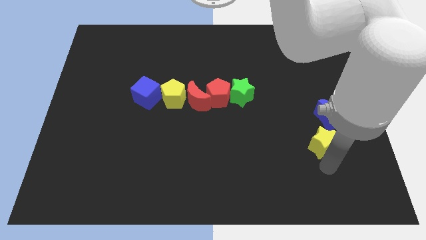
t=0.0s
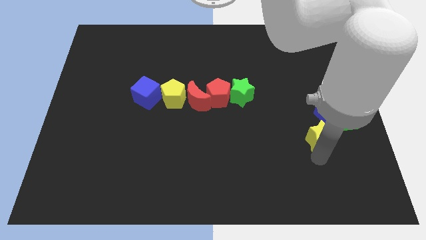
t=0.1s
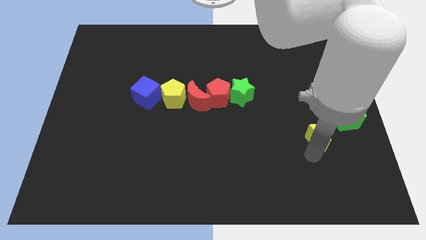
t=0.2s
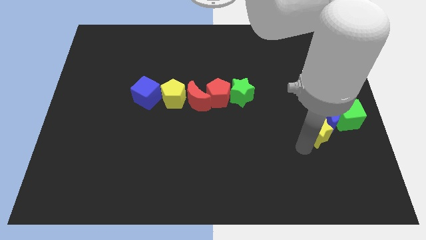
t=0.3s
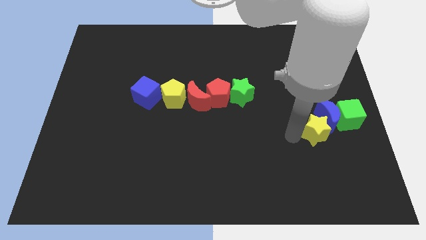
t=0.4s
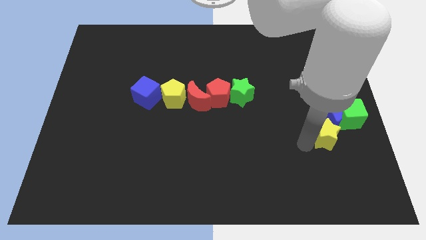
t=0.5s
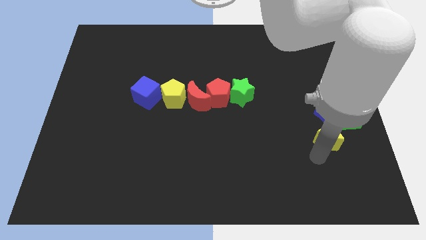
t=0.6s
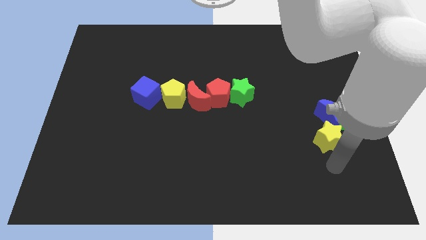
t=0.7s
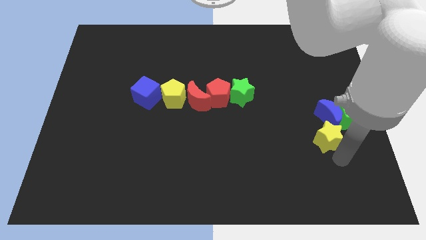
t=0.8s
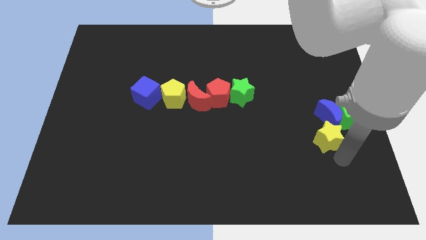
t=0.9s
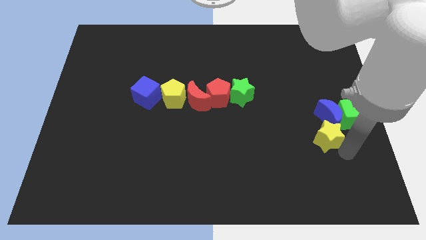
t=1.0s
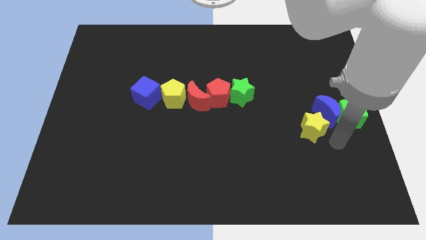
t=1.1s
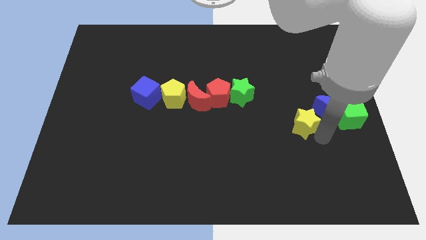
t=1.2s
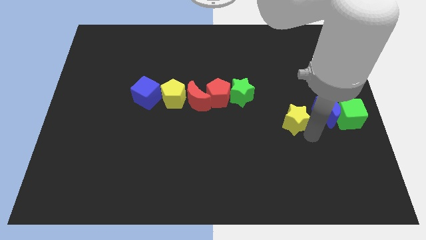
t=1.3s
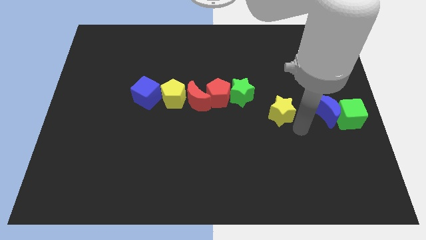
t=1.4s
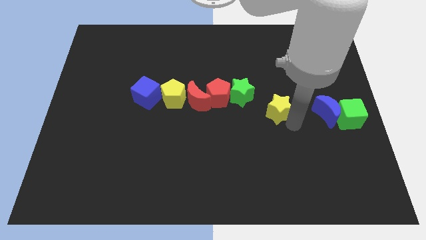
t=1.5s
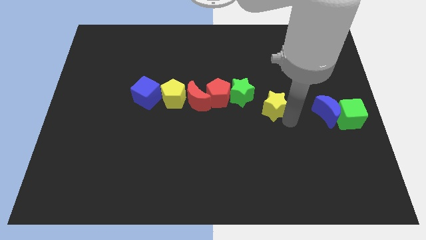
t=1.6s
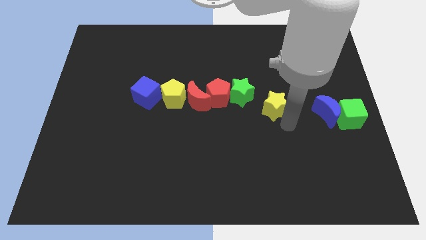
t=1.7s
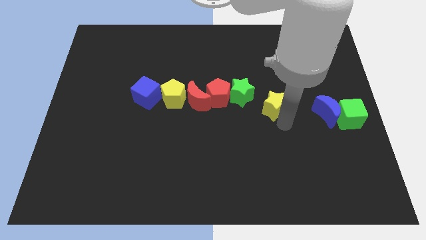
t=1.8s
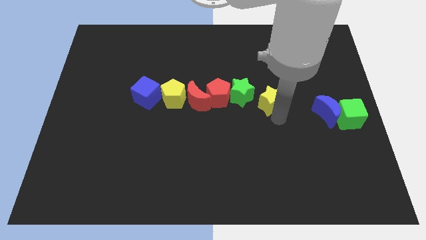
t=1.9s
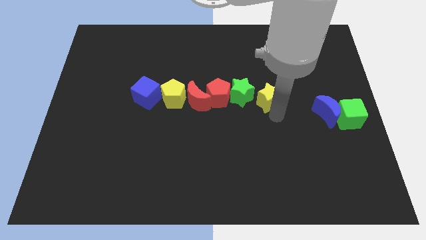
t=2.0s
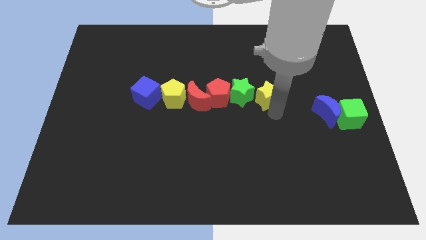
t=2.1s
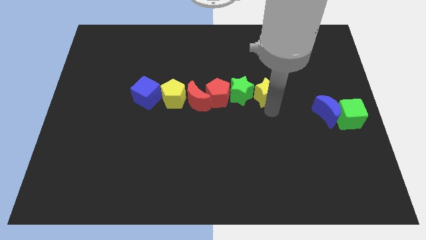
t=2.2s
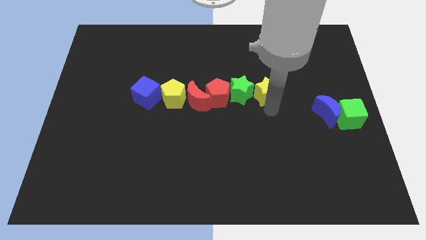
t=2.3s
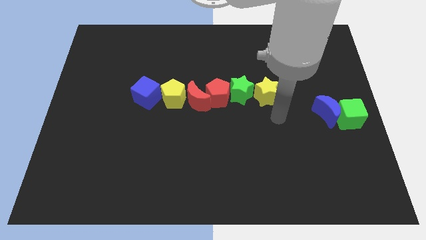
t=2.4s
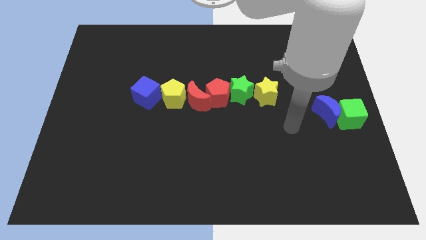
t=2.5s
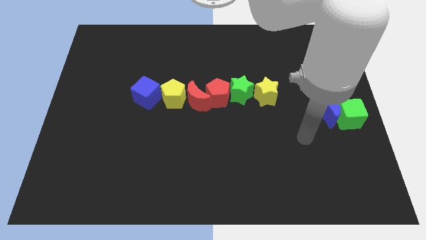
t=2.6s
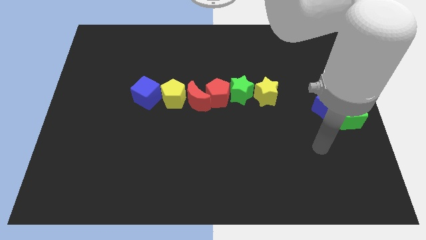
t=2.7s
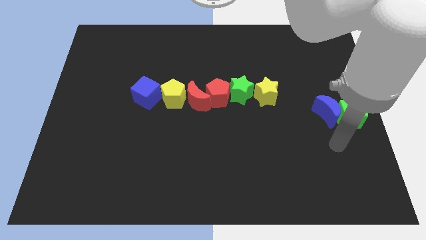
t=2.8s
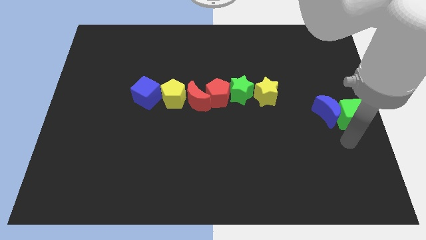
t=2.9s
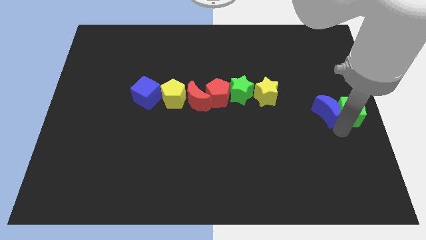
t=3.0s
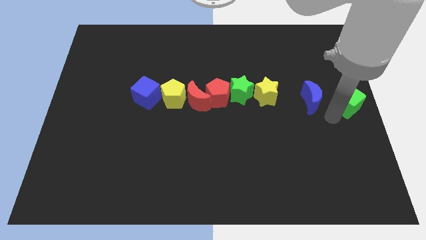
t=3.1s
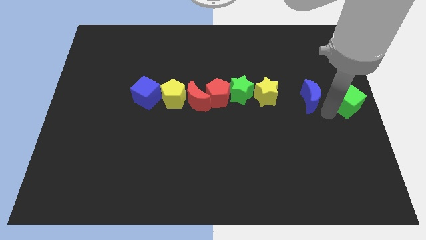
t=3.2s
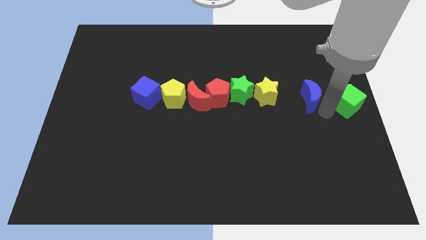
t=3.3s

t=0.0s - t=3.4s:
push the yellow star to the right of the green star

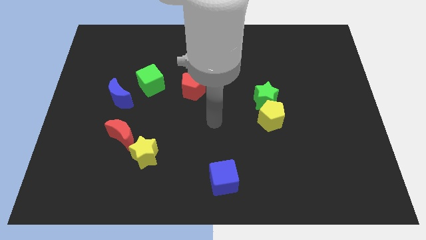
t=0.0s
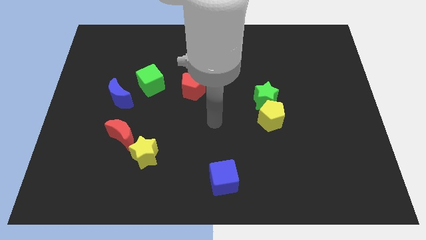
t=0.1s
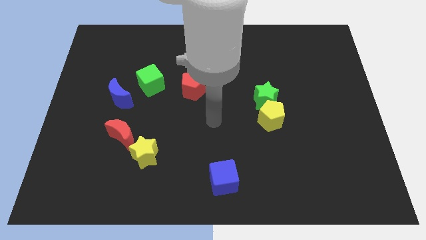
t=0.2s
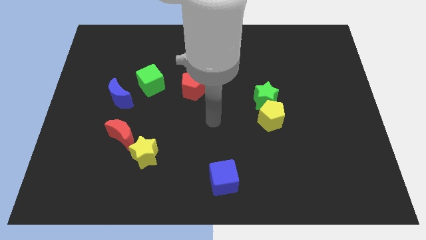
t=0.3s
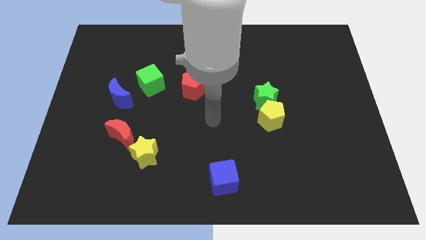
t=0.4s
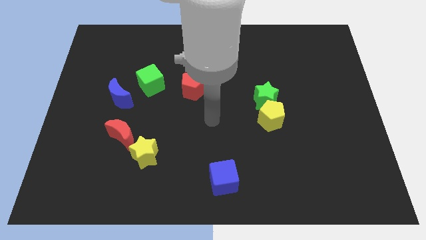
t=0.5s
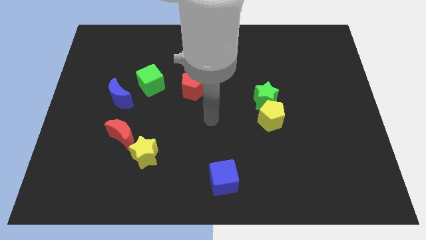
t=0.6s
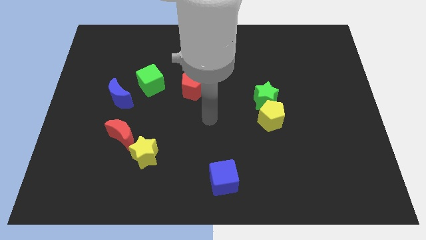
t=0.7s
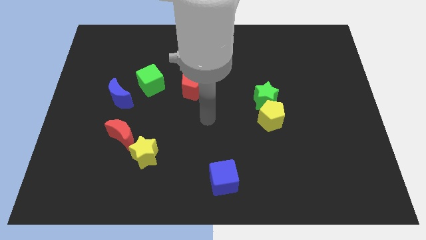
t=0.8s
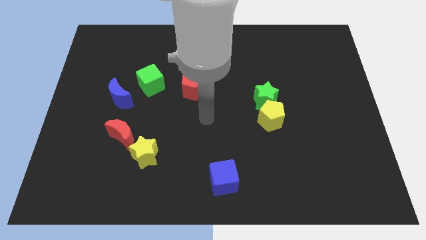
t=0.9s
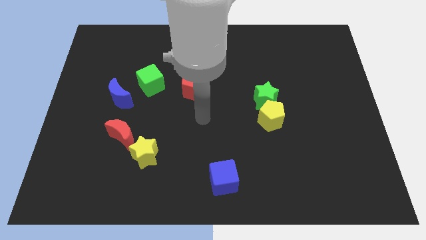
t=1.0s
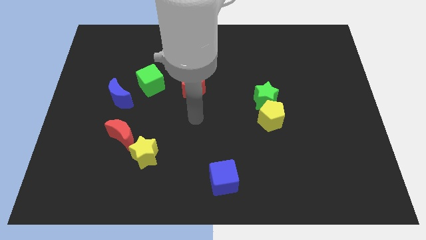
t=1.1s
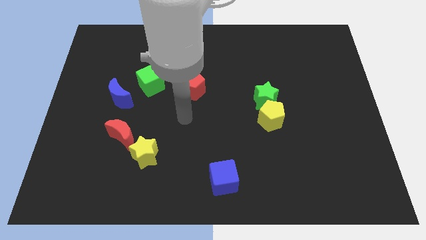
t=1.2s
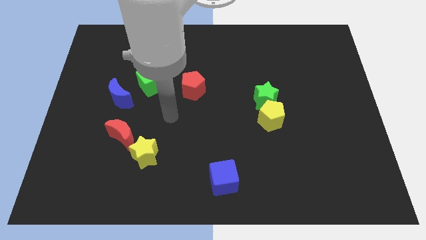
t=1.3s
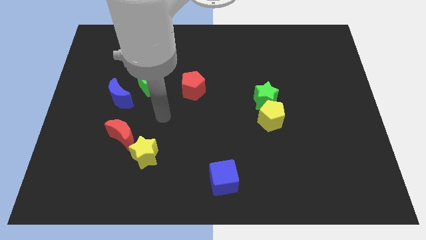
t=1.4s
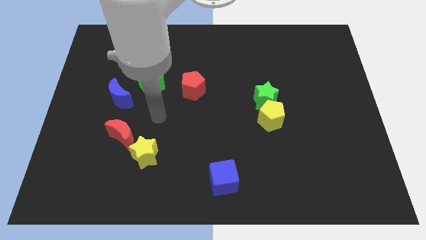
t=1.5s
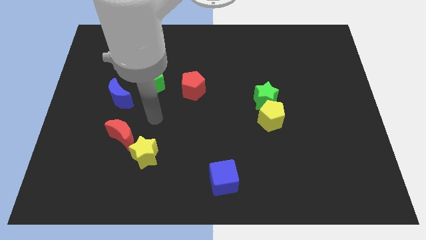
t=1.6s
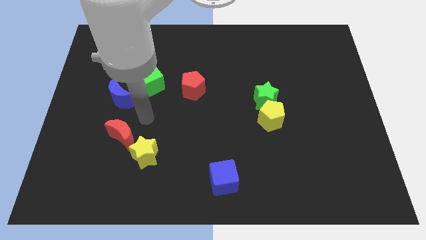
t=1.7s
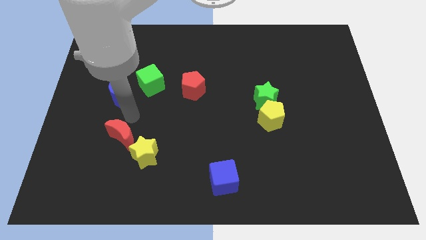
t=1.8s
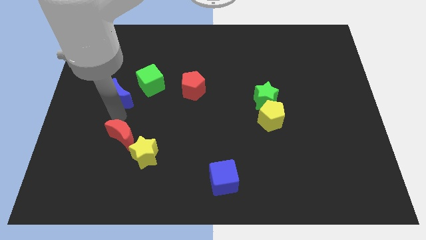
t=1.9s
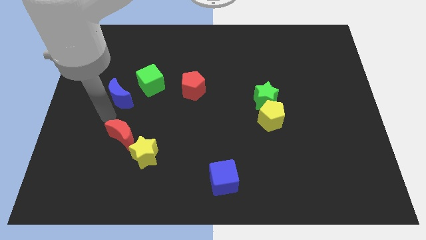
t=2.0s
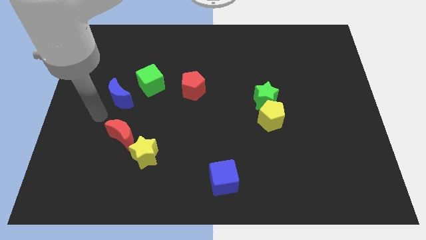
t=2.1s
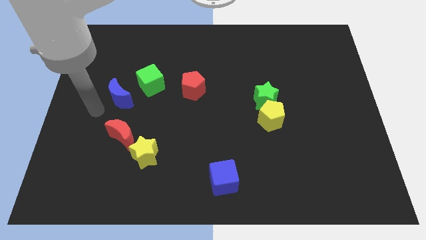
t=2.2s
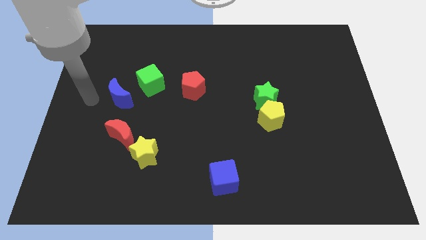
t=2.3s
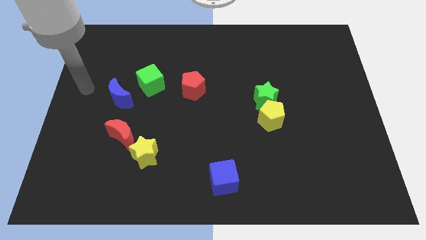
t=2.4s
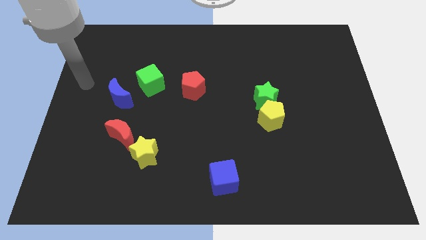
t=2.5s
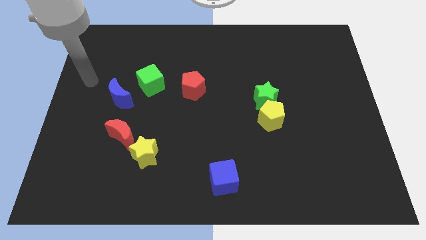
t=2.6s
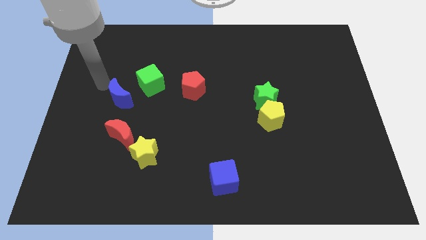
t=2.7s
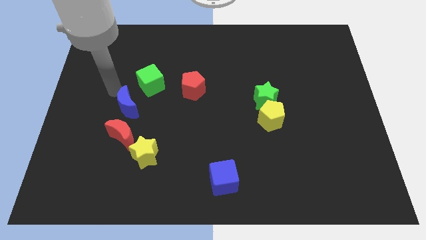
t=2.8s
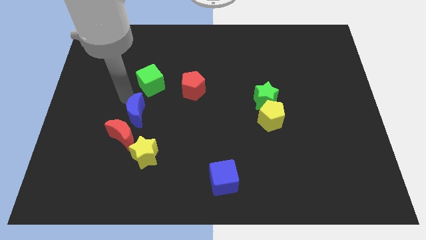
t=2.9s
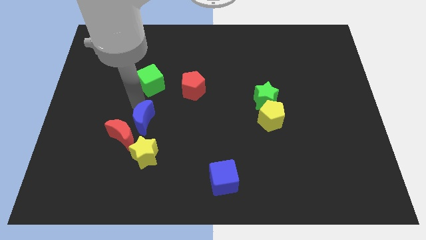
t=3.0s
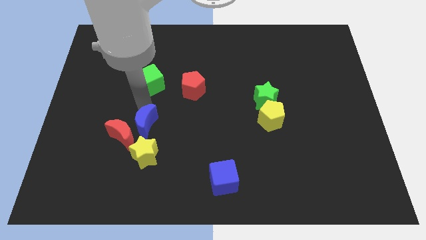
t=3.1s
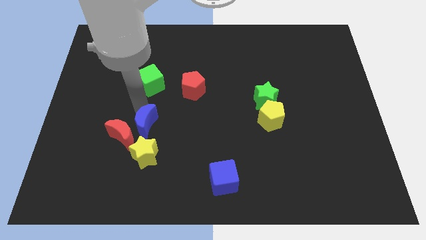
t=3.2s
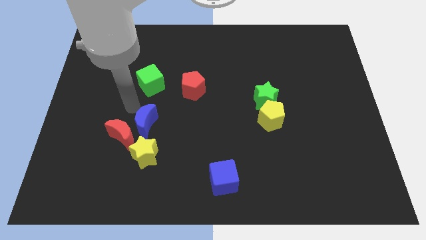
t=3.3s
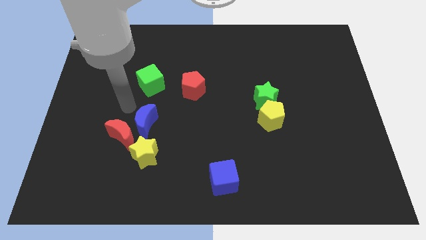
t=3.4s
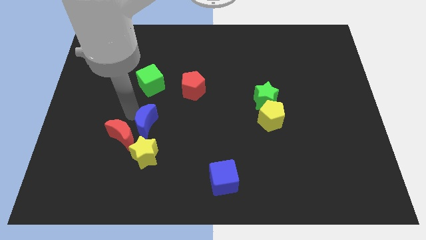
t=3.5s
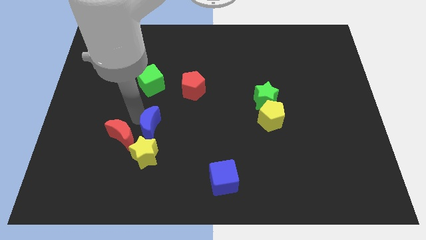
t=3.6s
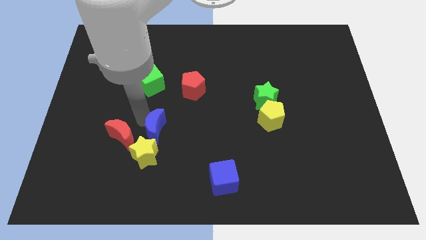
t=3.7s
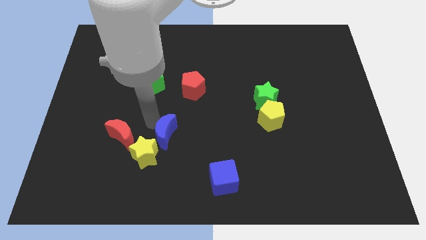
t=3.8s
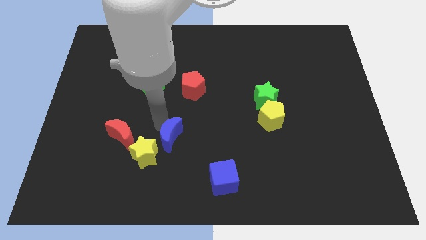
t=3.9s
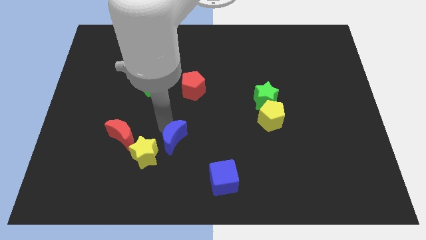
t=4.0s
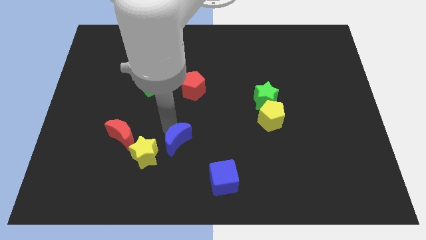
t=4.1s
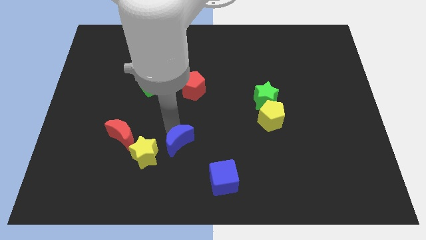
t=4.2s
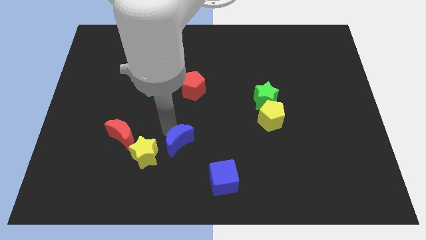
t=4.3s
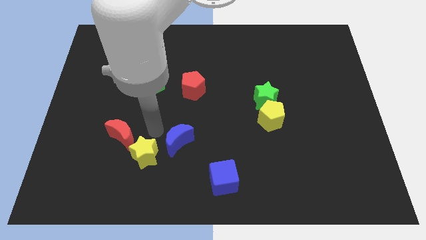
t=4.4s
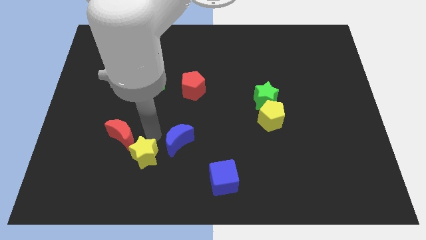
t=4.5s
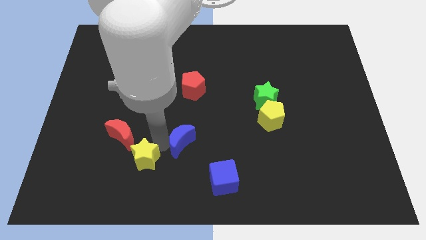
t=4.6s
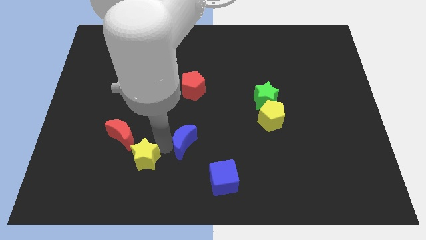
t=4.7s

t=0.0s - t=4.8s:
push the blue moon to the right of the yellow star

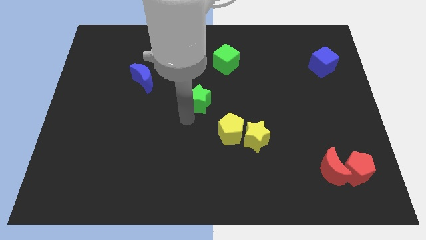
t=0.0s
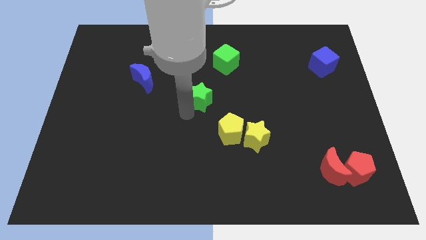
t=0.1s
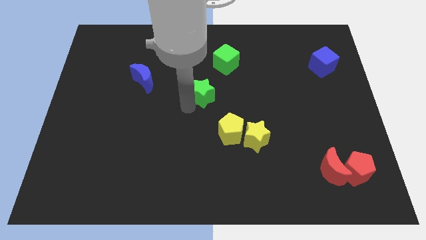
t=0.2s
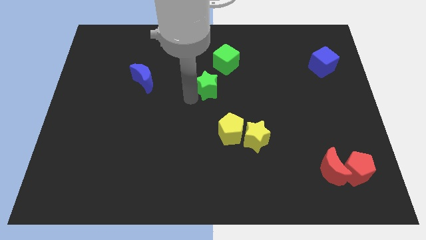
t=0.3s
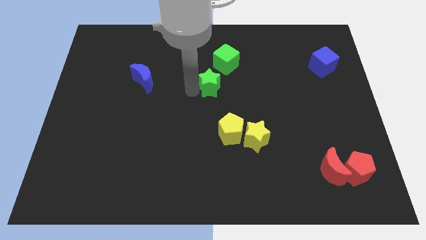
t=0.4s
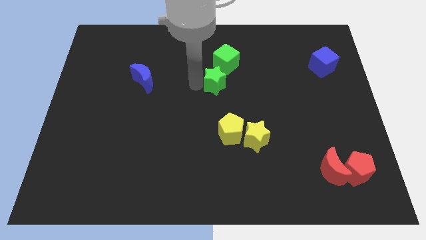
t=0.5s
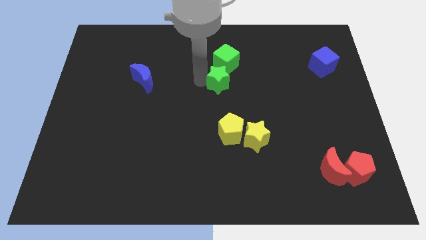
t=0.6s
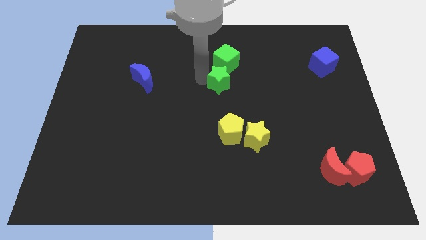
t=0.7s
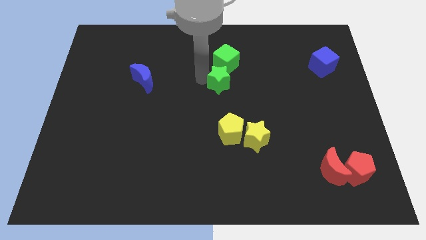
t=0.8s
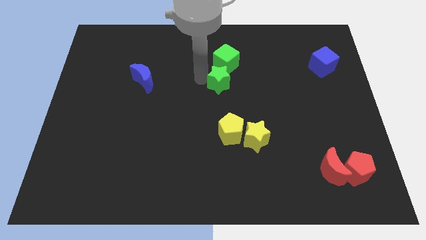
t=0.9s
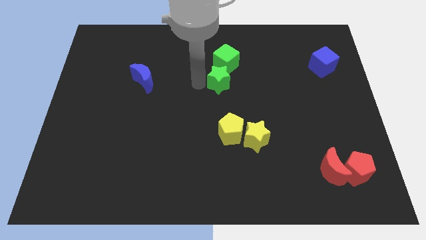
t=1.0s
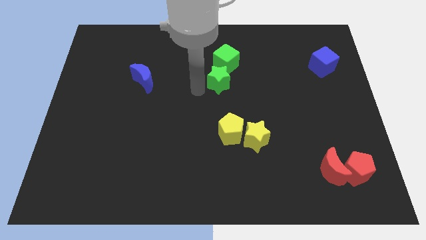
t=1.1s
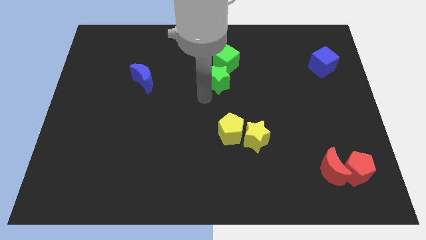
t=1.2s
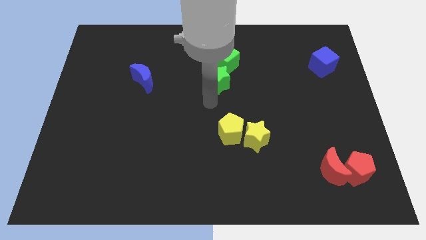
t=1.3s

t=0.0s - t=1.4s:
move the green star towards the bottom of the green cube
